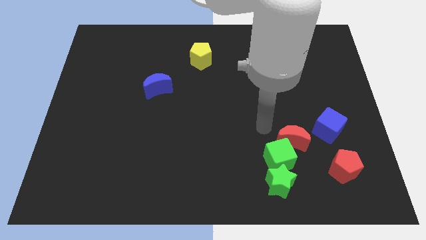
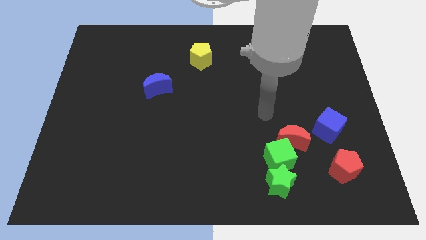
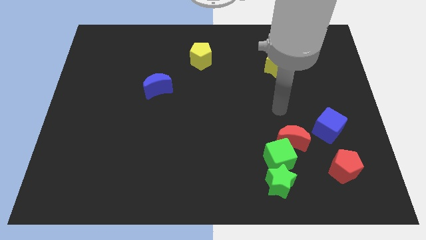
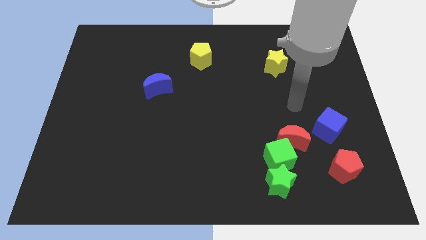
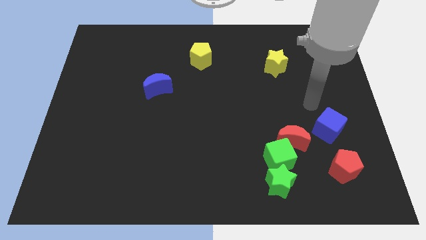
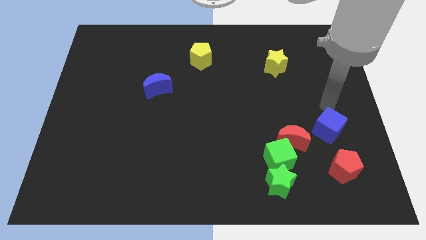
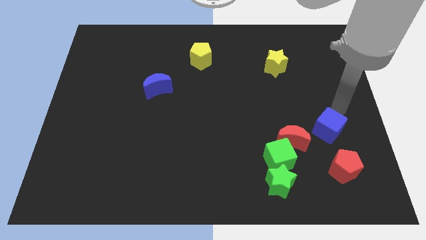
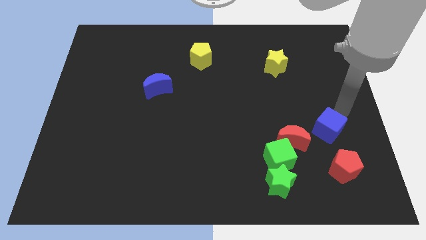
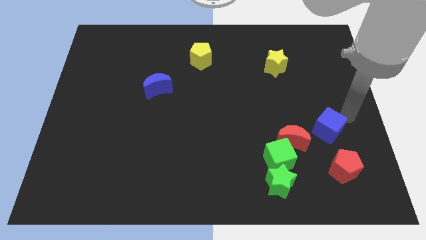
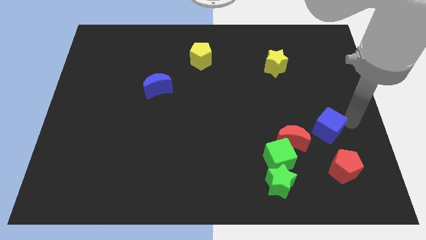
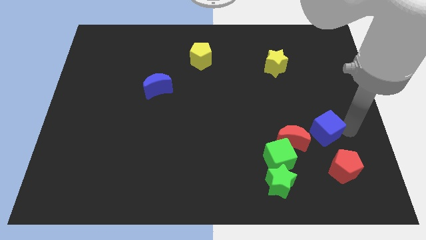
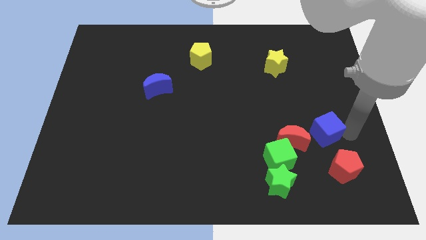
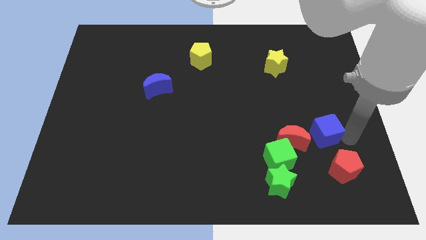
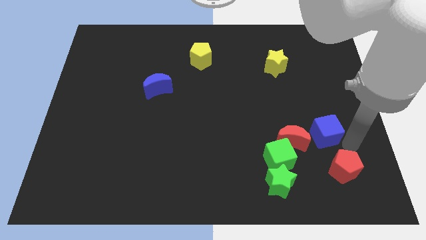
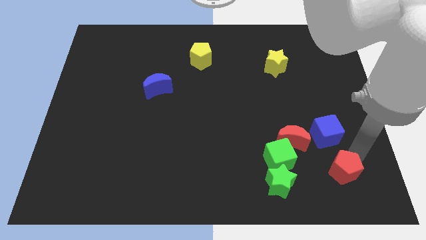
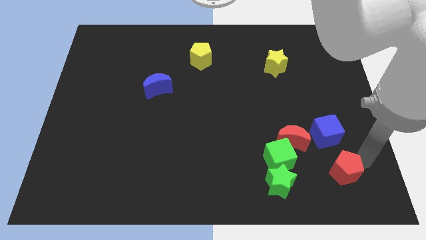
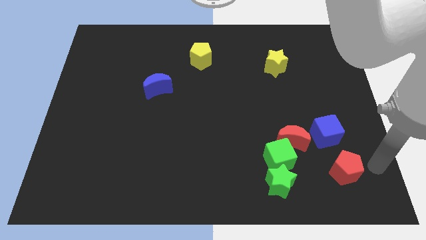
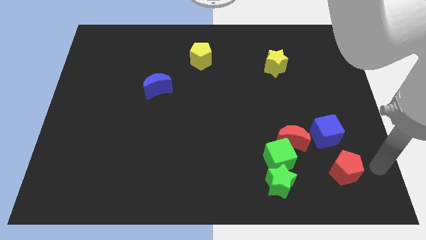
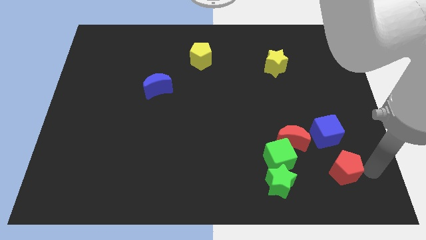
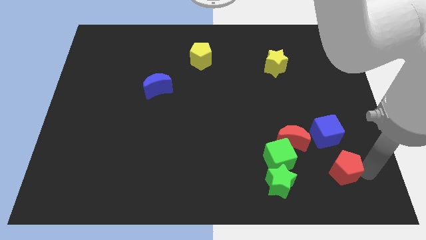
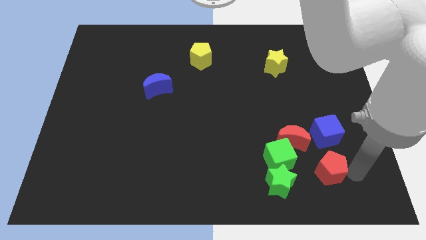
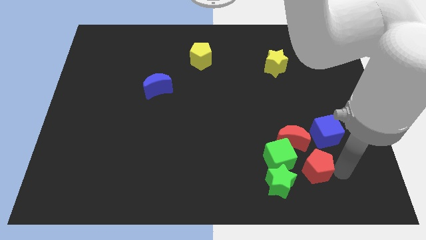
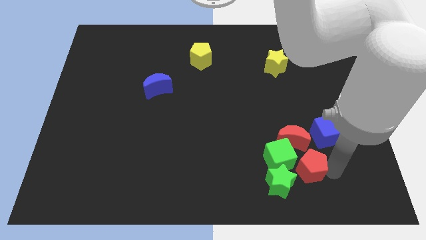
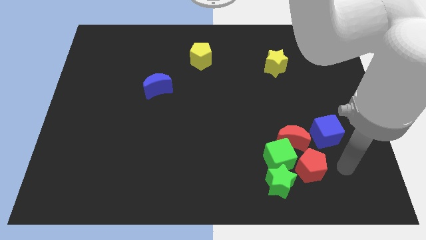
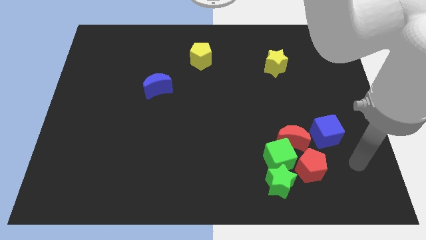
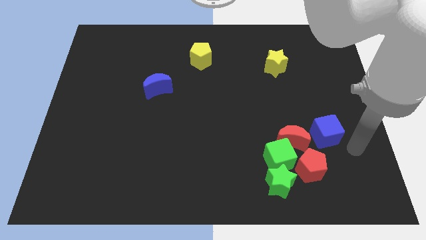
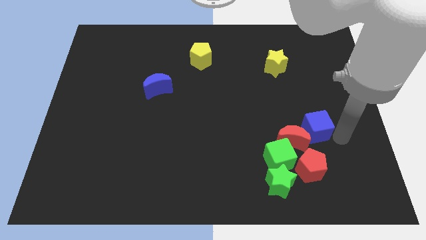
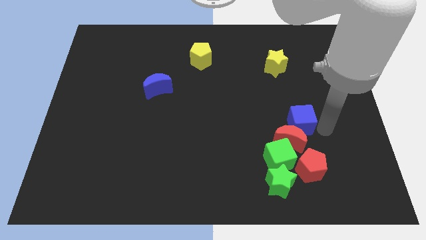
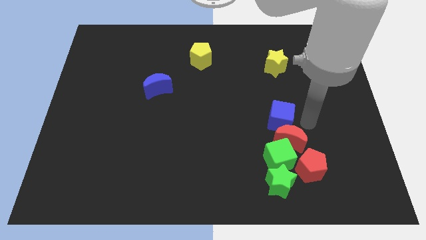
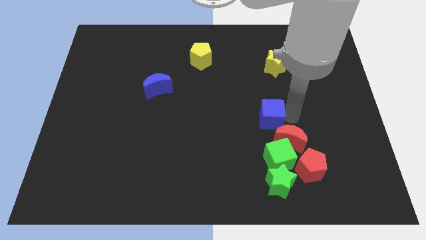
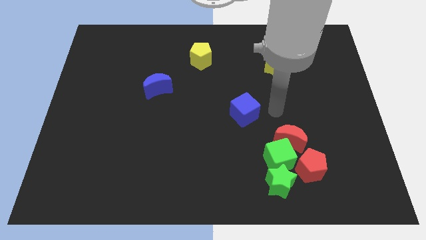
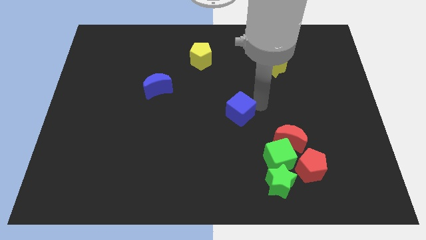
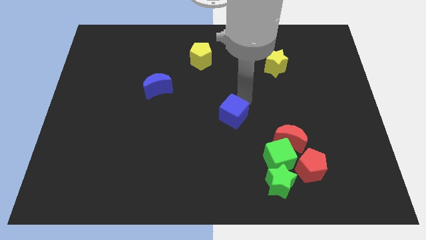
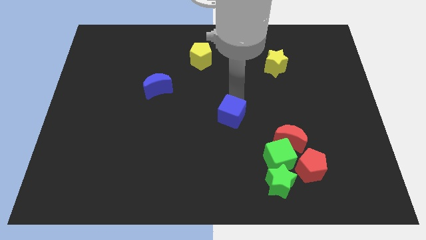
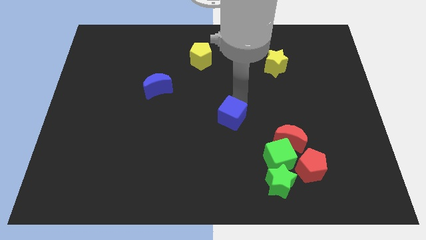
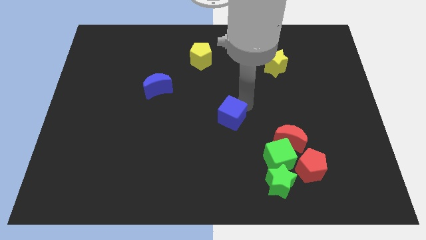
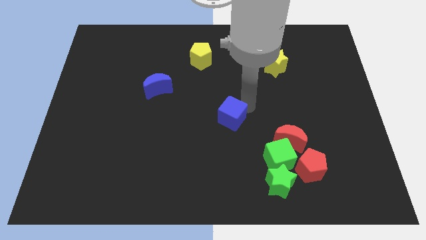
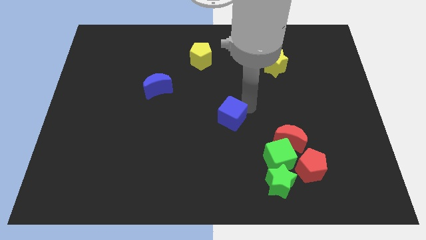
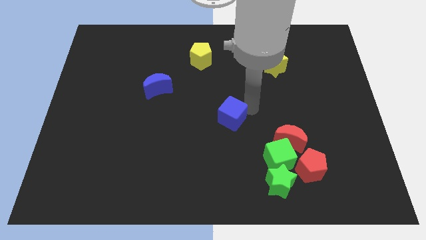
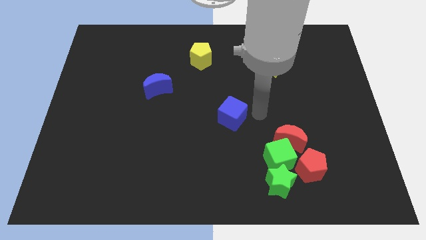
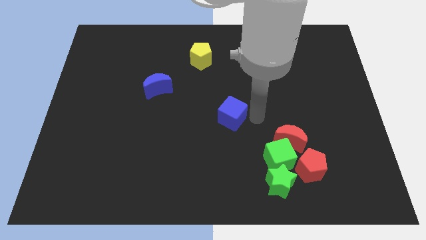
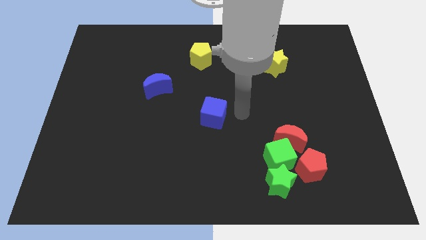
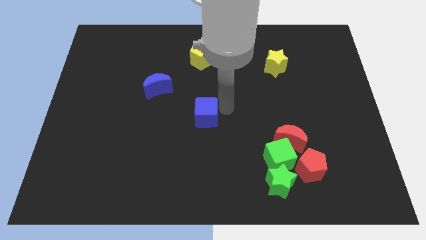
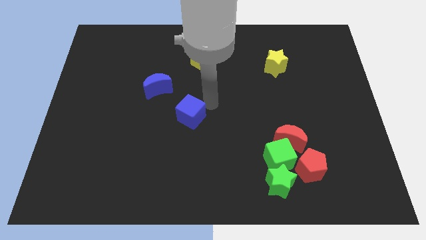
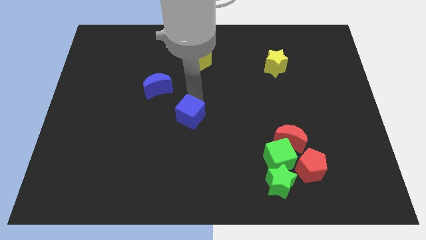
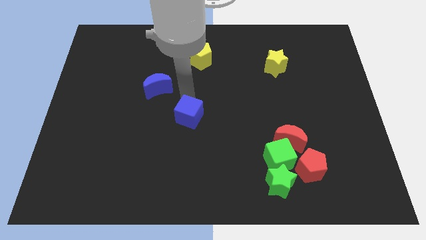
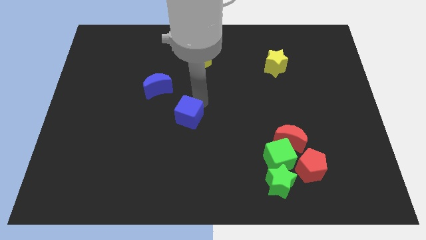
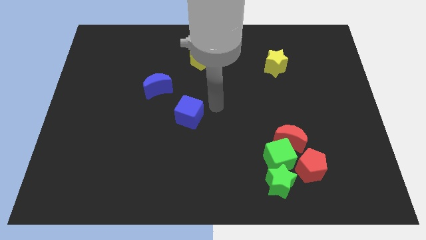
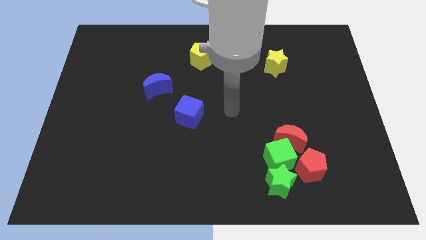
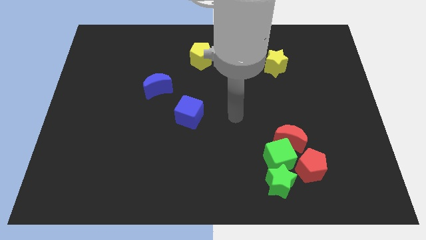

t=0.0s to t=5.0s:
place the blue blocks below the yellow pentagon

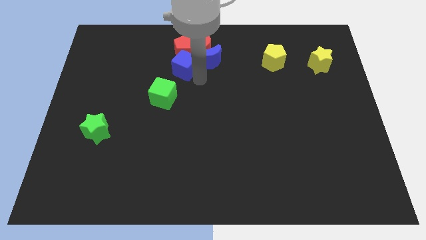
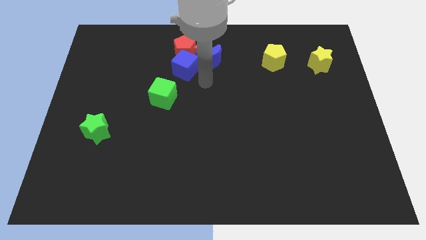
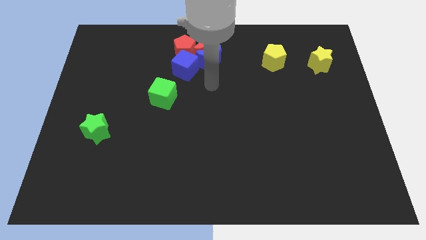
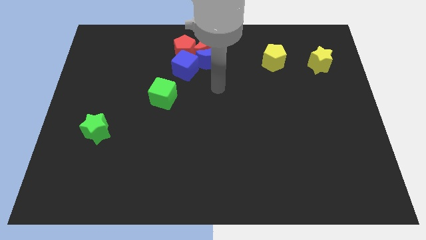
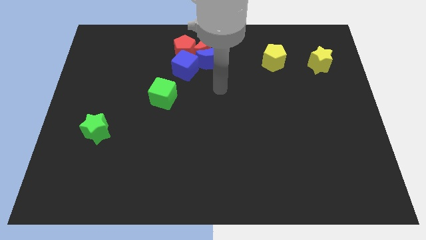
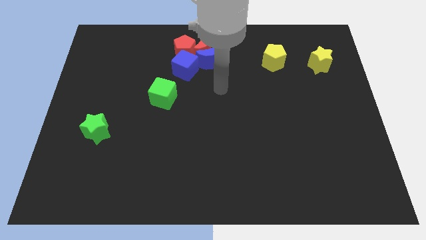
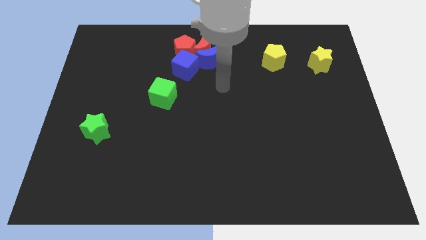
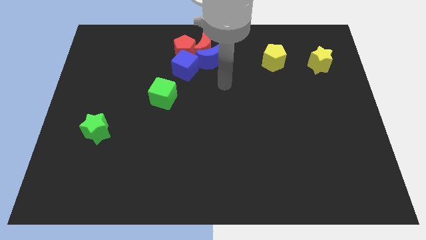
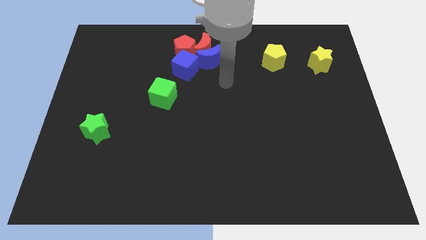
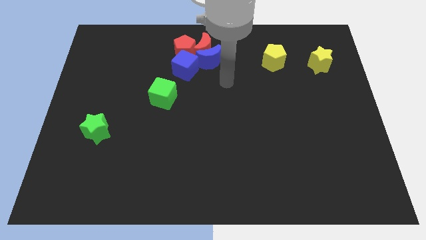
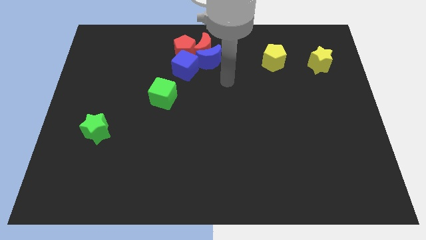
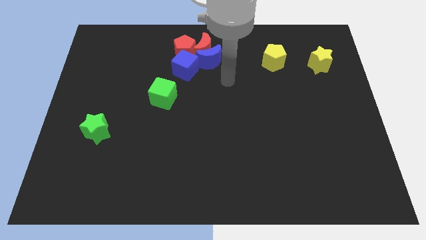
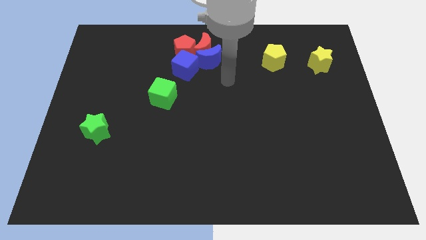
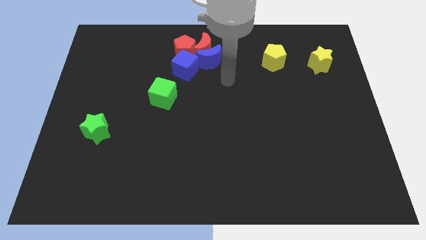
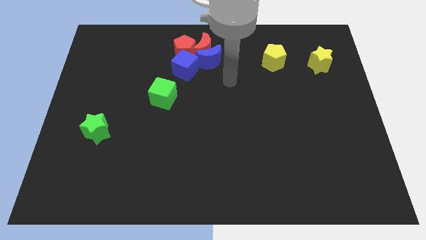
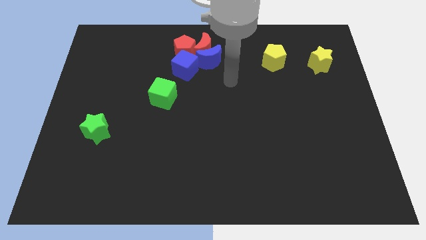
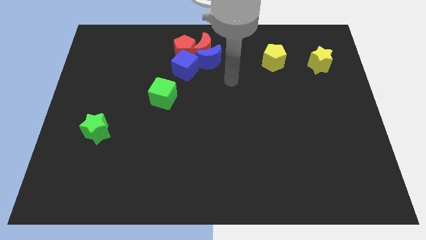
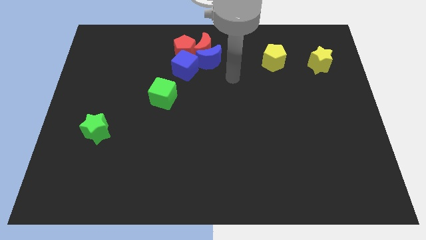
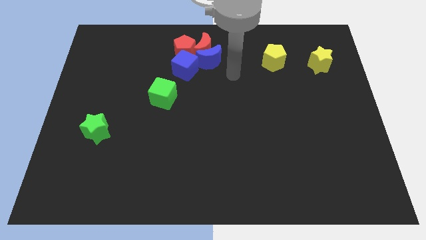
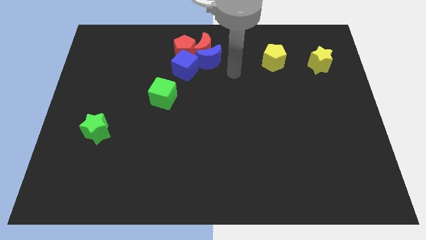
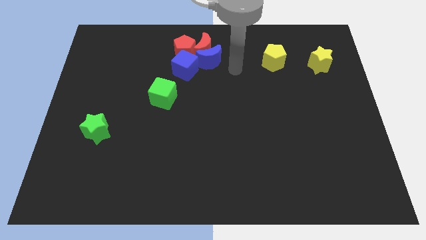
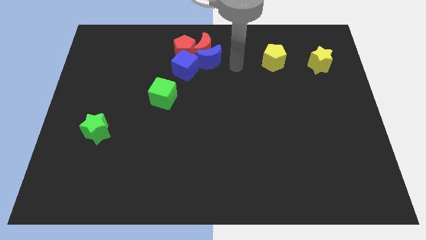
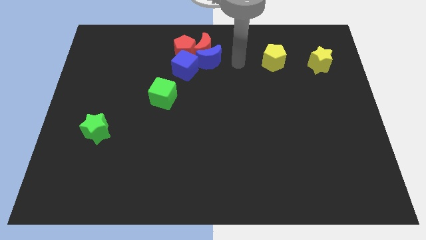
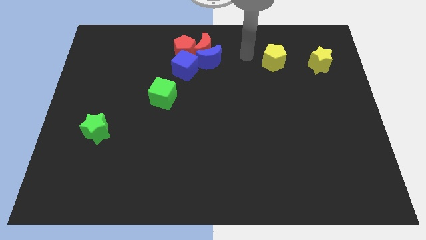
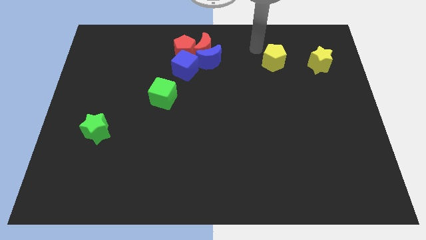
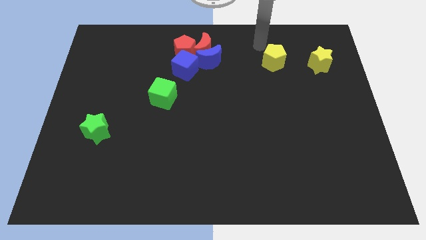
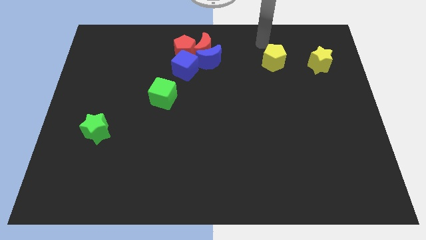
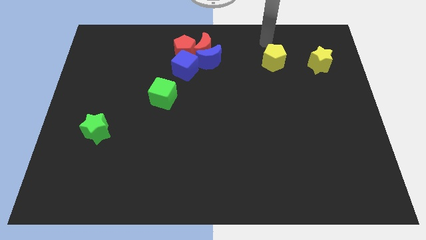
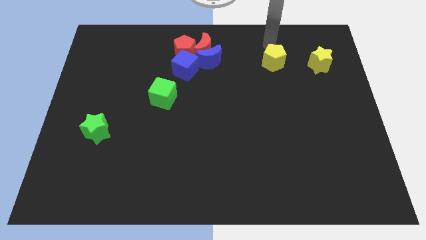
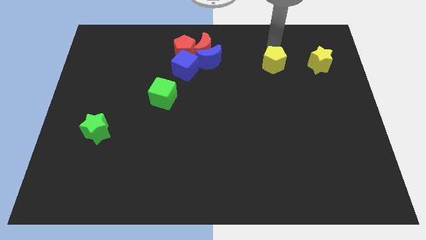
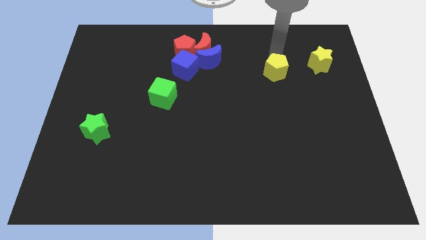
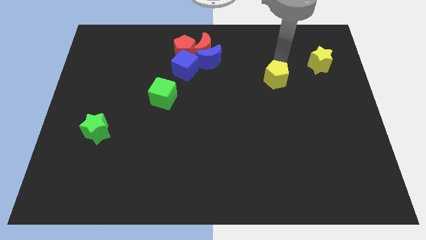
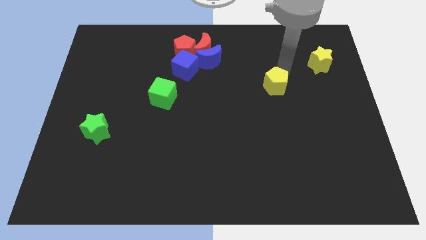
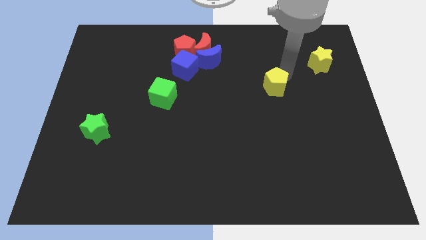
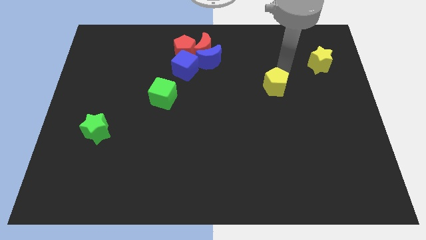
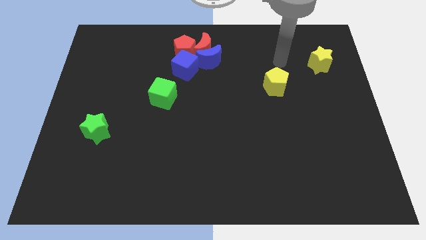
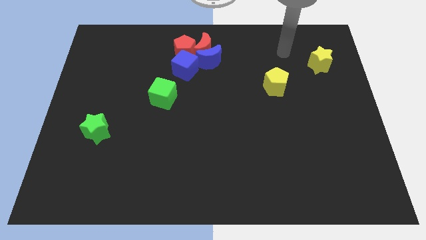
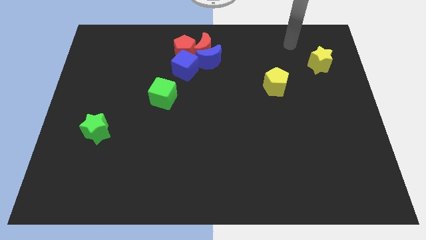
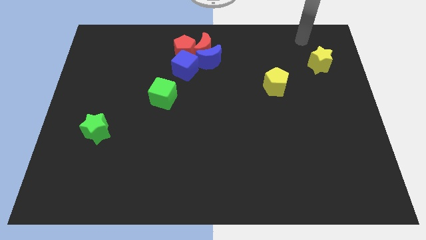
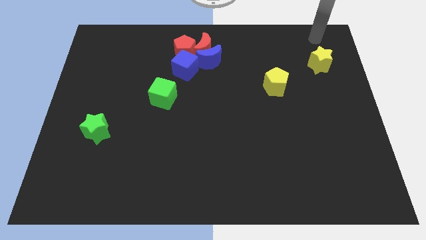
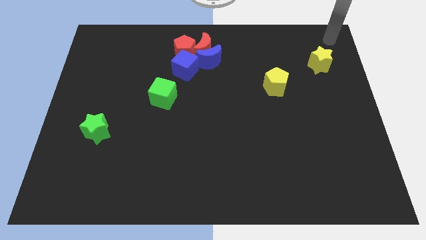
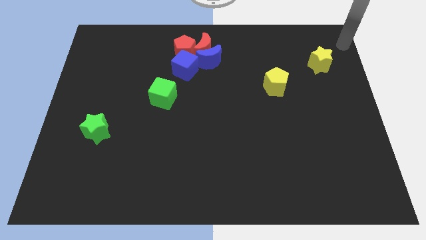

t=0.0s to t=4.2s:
move the yellow pentagon at the bottom left side of the yellow star
